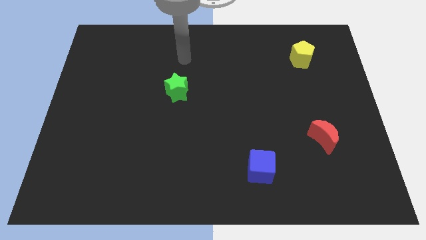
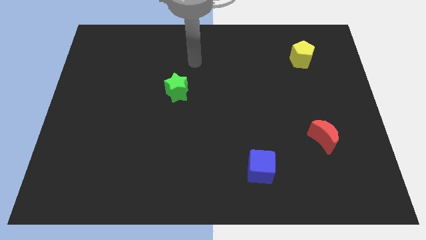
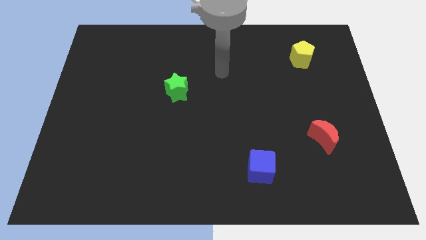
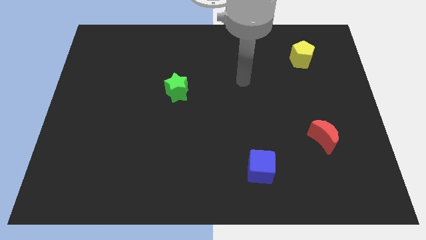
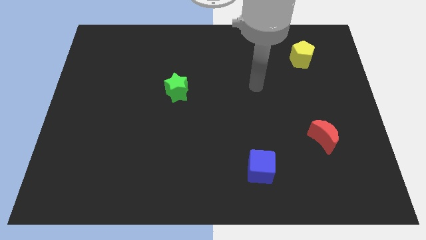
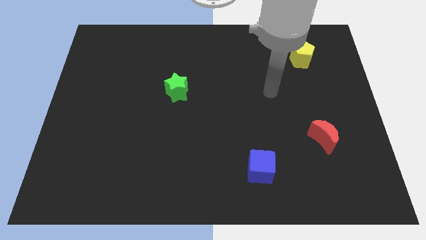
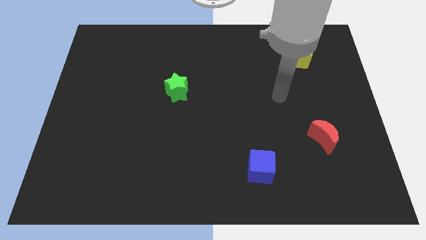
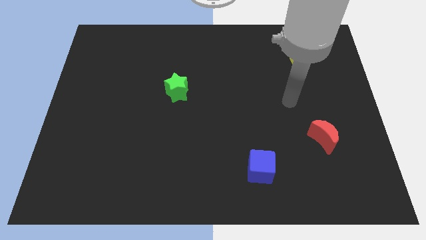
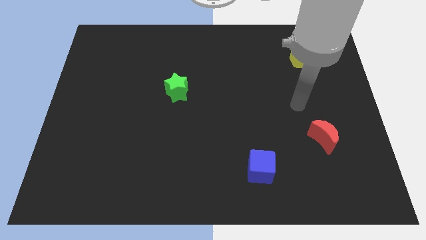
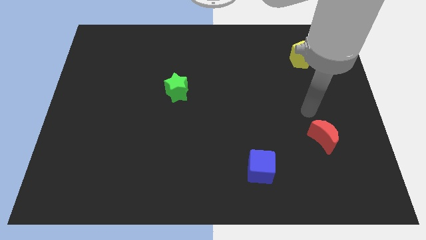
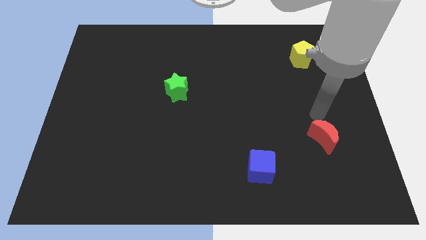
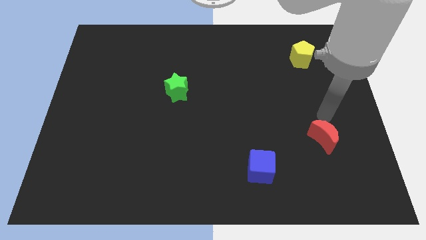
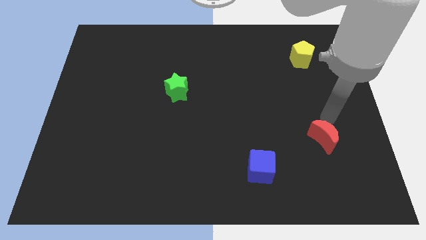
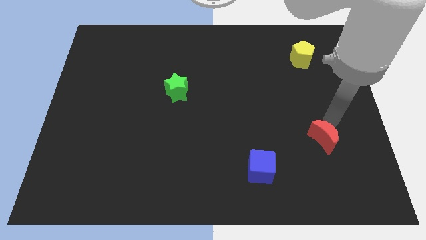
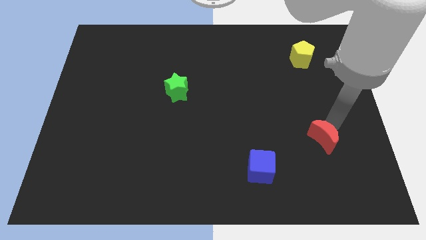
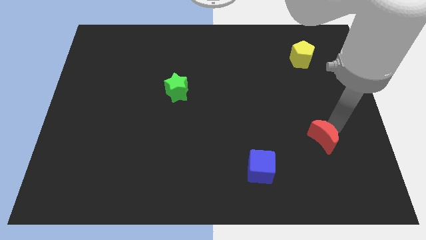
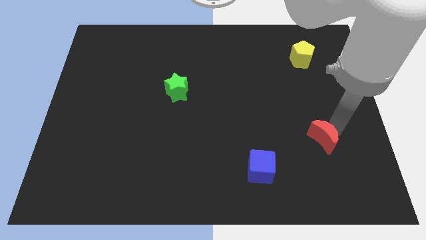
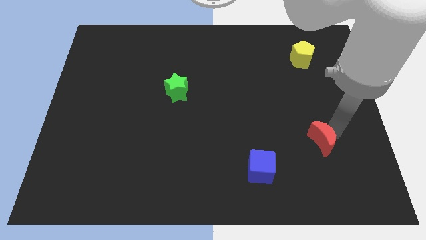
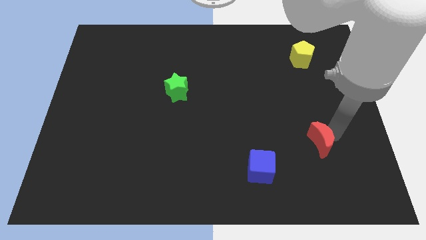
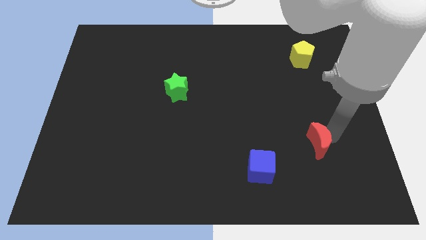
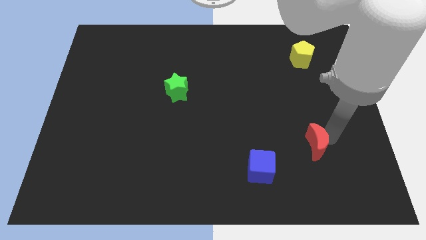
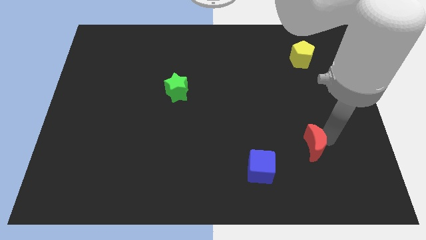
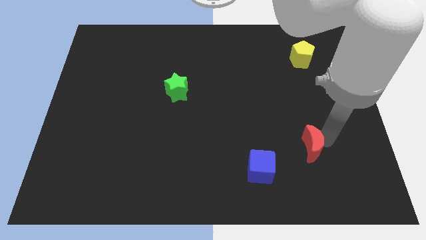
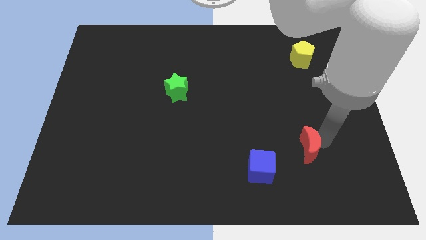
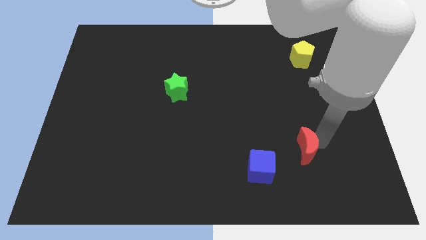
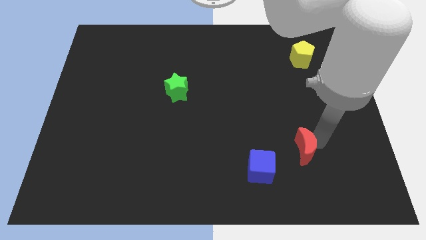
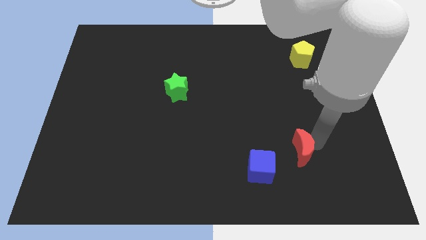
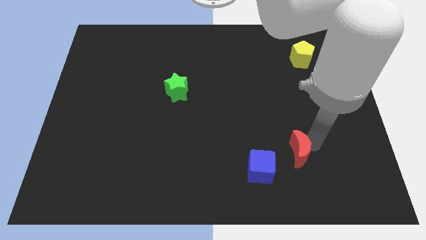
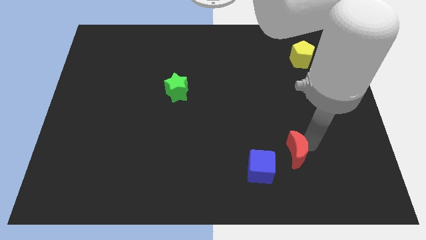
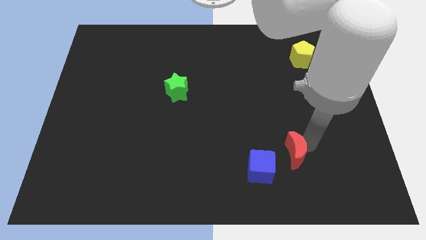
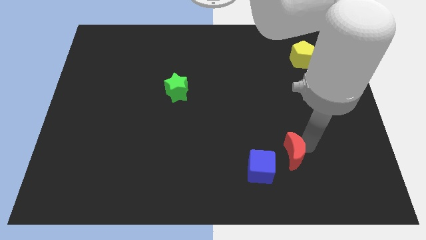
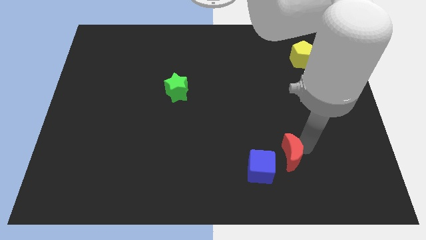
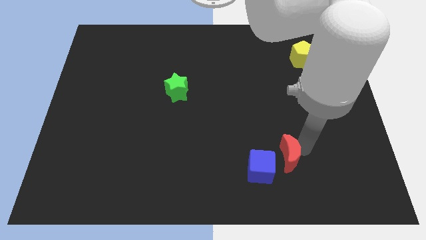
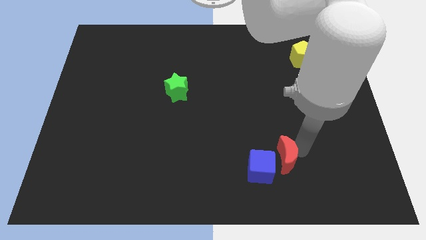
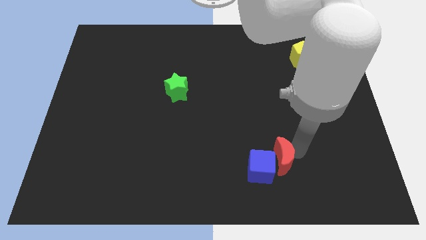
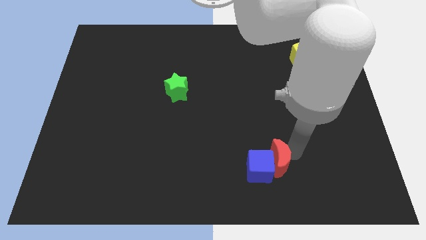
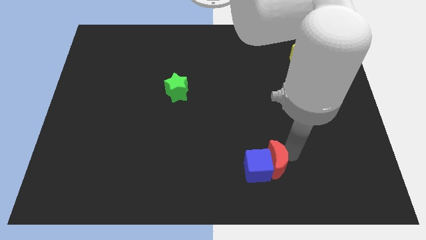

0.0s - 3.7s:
move the moon close to the blue cube

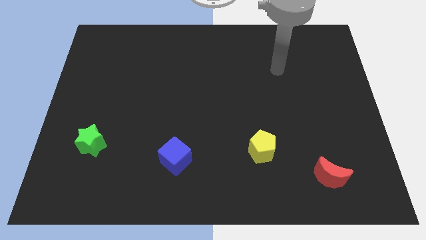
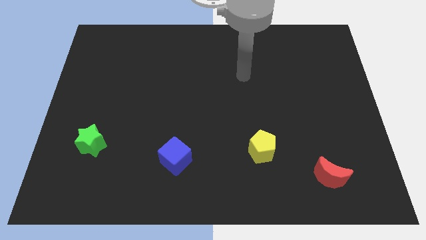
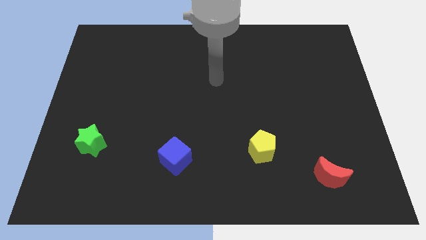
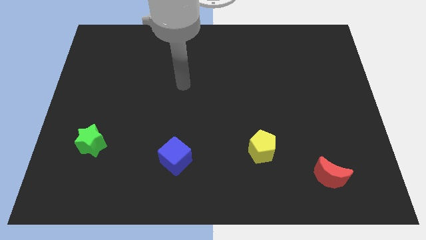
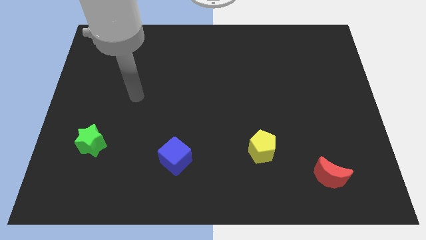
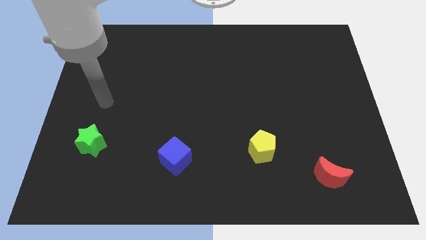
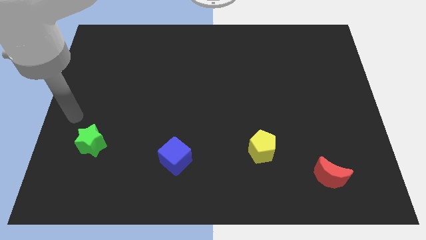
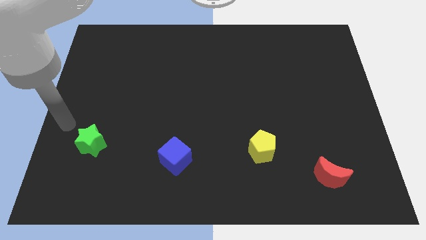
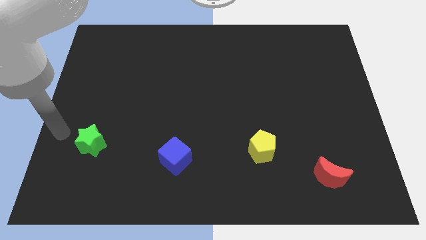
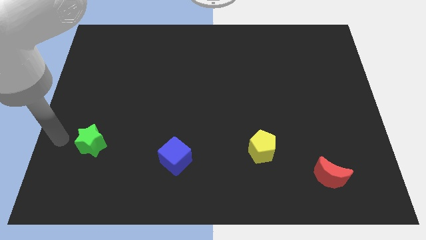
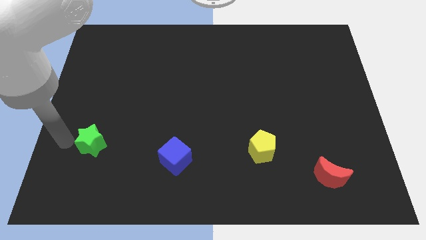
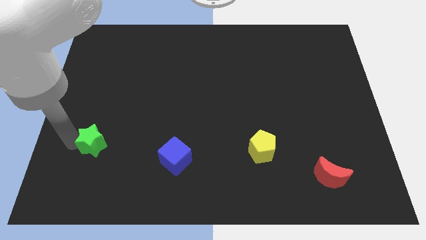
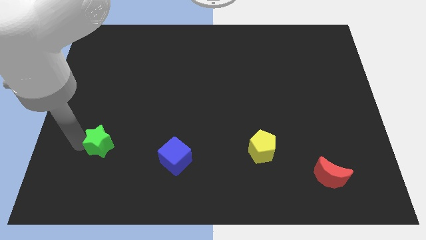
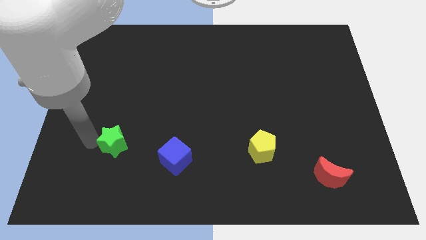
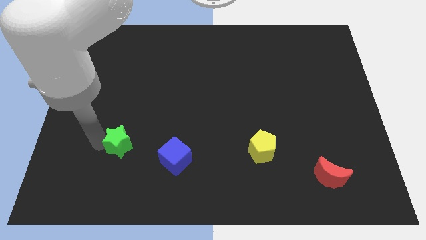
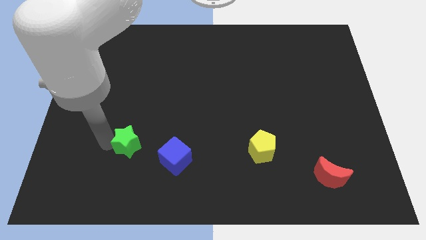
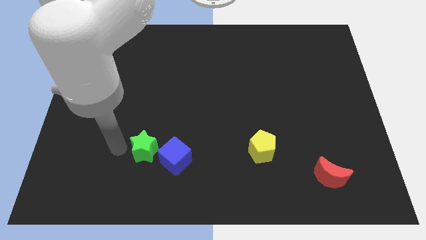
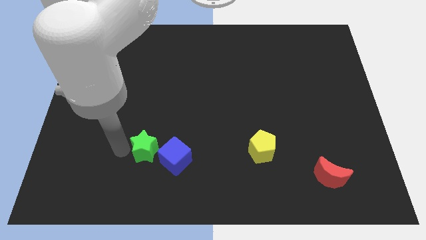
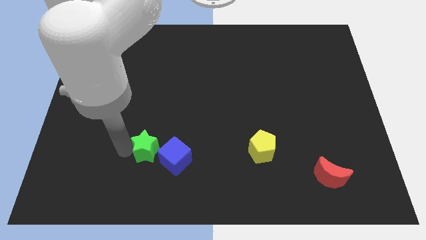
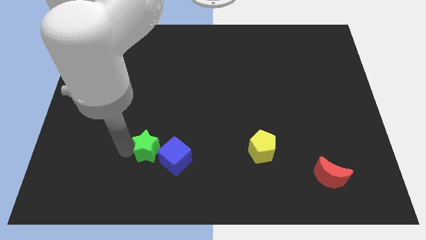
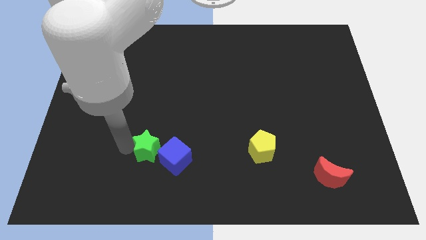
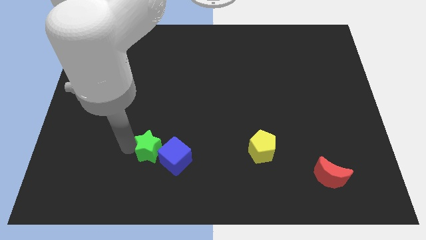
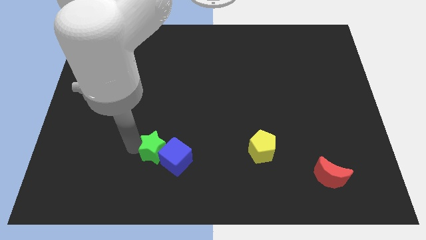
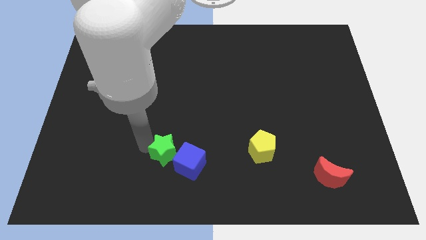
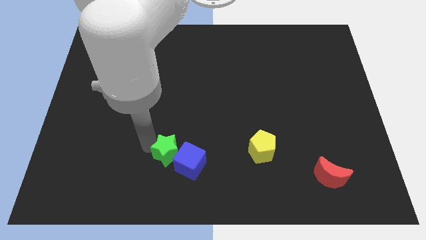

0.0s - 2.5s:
move the star close to the blue cube

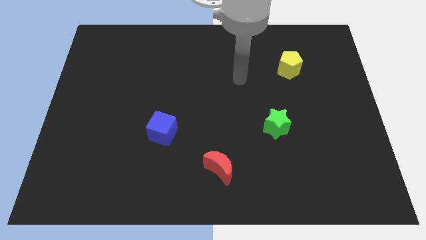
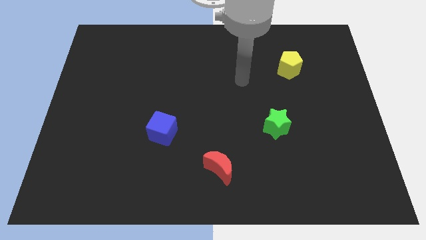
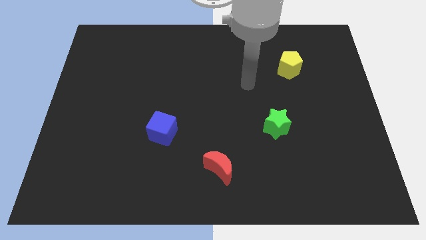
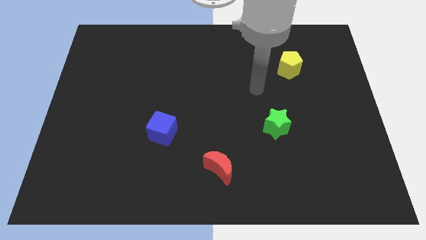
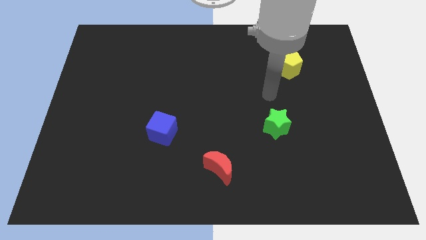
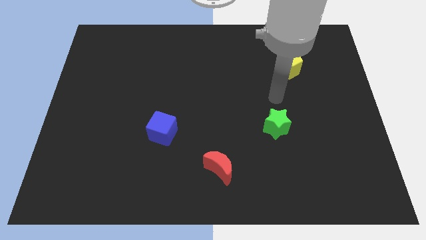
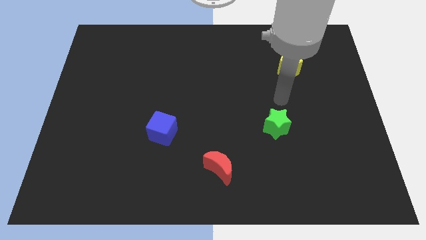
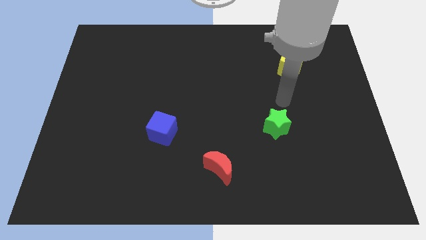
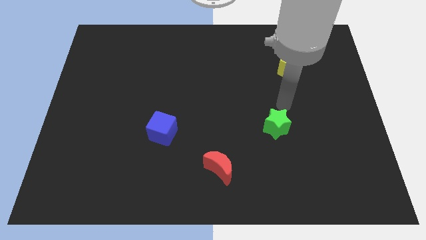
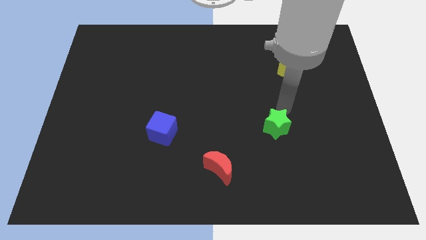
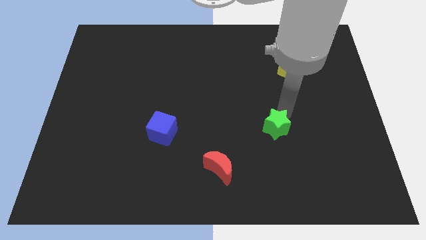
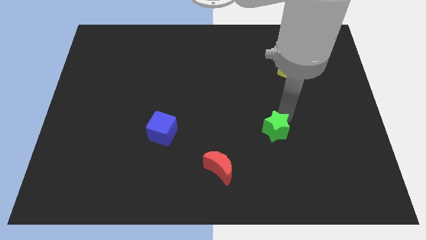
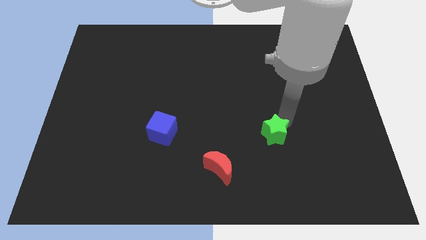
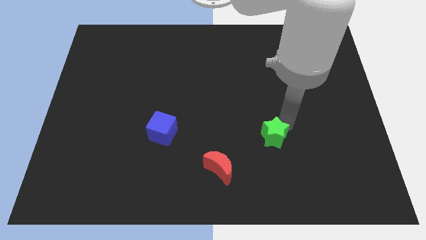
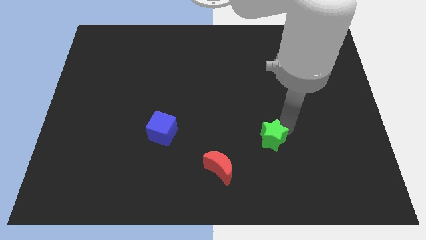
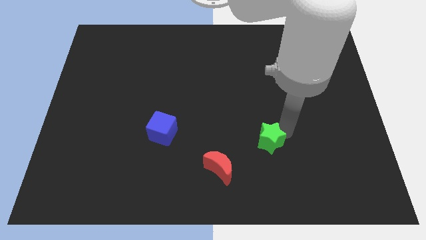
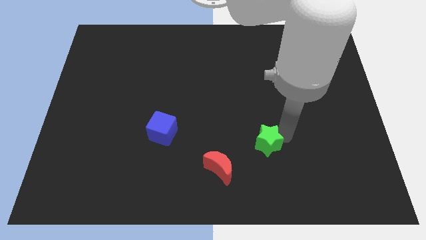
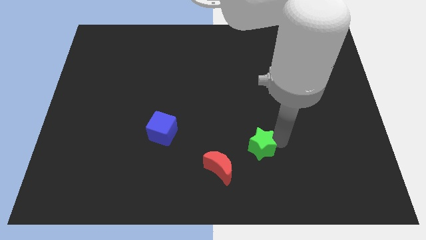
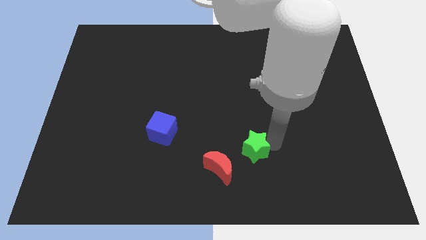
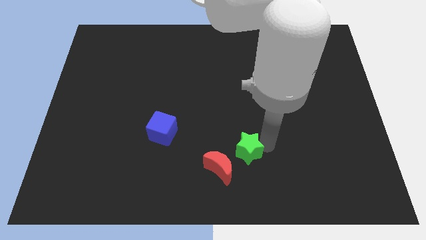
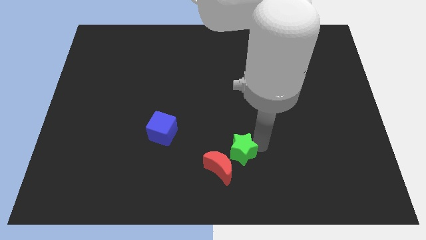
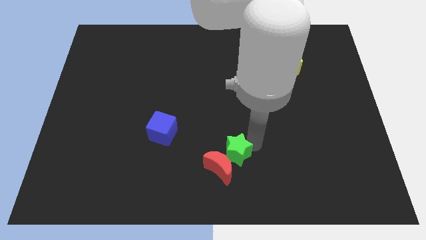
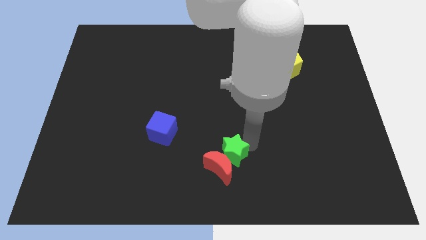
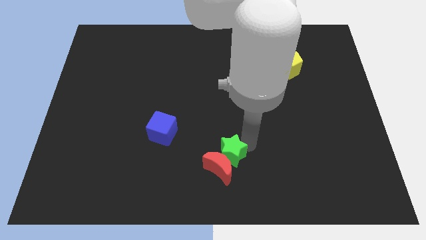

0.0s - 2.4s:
slide the green block next to the moon
